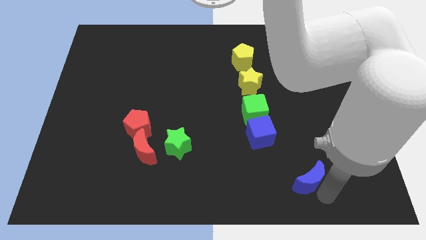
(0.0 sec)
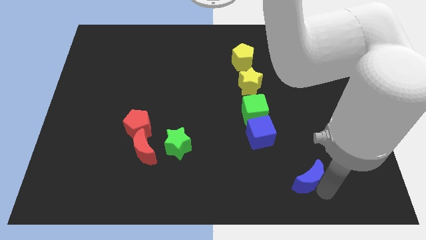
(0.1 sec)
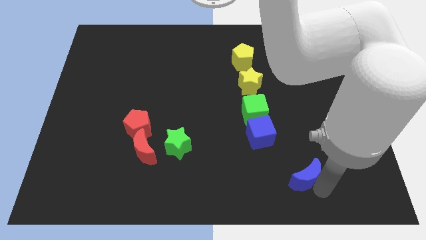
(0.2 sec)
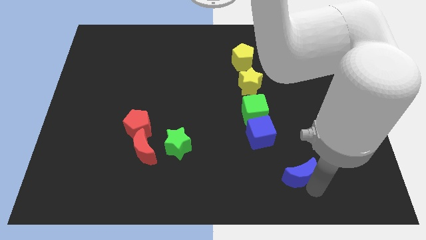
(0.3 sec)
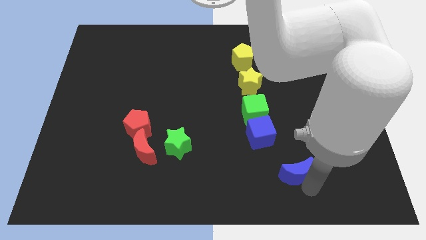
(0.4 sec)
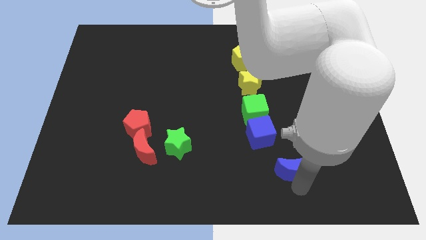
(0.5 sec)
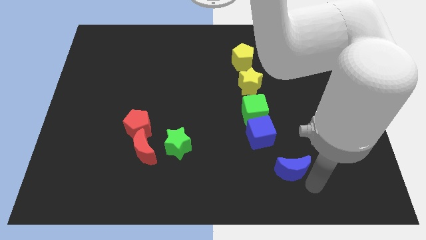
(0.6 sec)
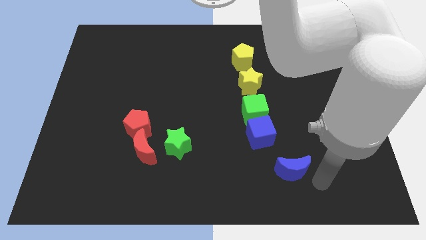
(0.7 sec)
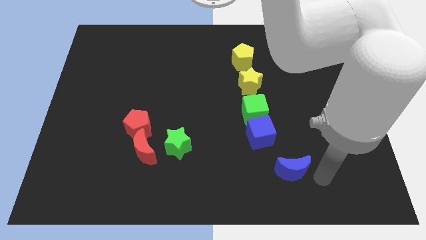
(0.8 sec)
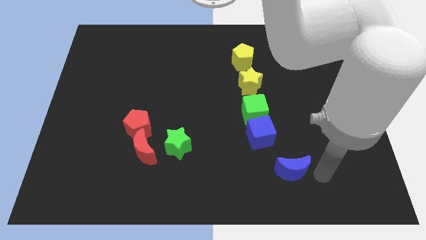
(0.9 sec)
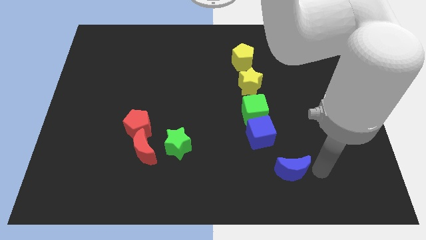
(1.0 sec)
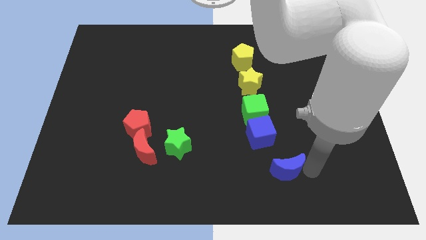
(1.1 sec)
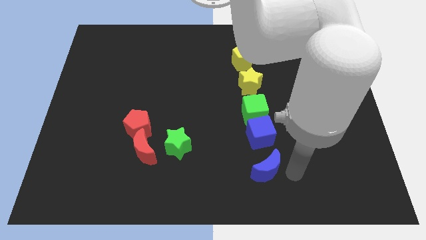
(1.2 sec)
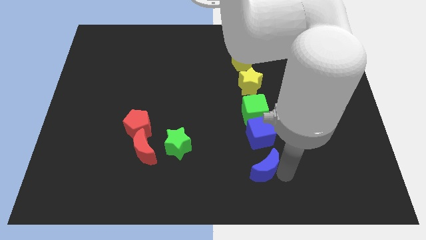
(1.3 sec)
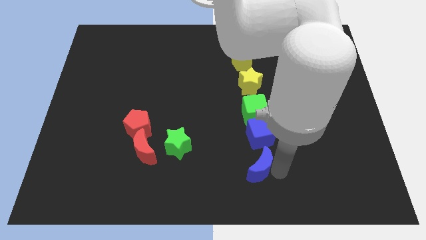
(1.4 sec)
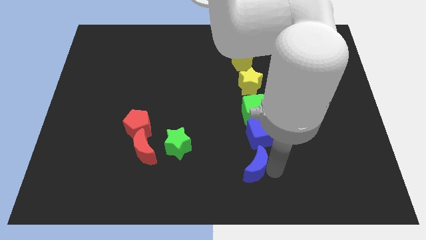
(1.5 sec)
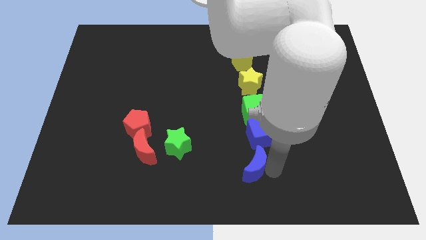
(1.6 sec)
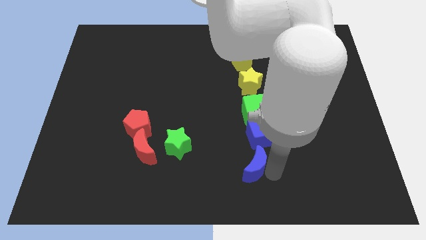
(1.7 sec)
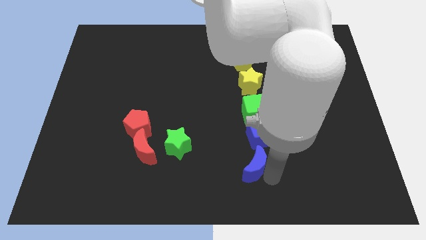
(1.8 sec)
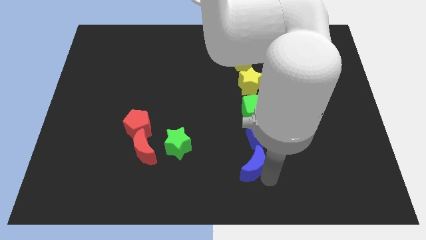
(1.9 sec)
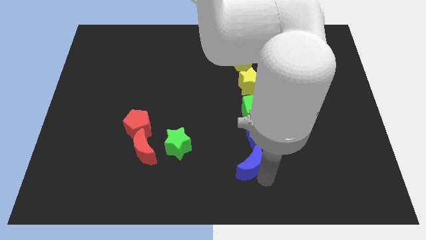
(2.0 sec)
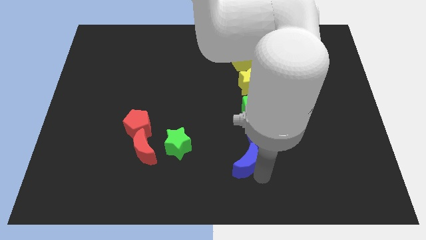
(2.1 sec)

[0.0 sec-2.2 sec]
place blue moon below blue cube

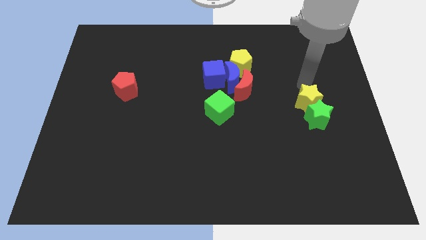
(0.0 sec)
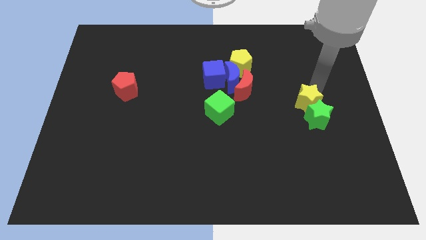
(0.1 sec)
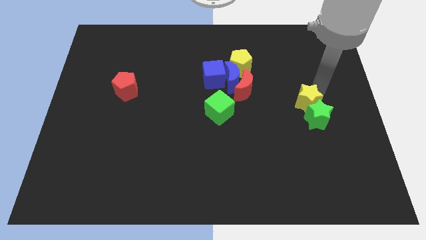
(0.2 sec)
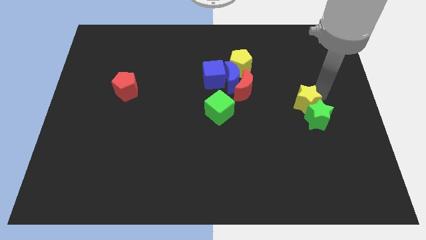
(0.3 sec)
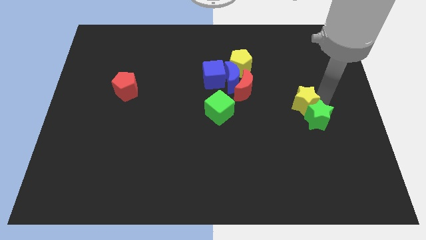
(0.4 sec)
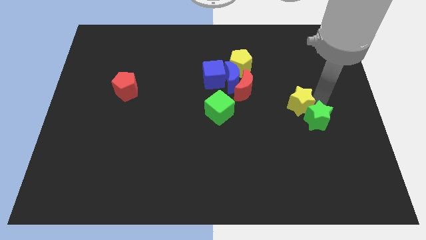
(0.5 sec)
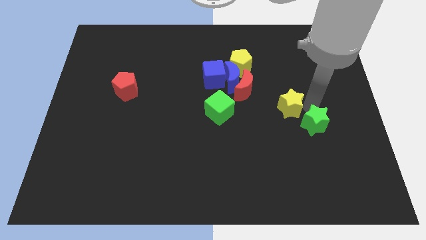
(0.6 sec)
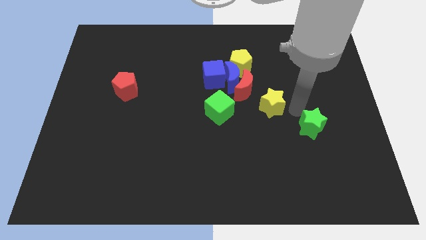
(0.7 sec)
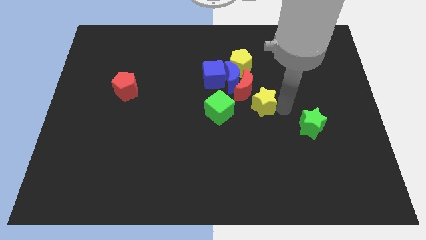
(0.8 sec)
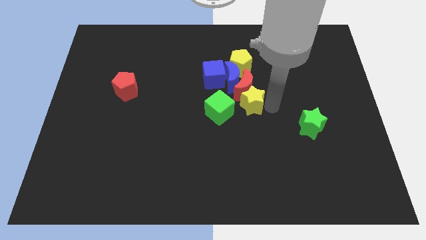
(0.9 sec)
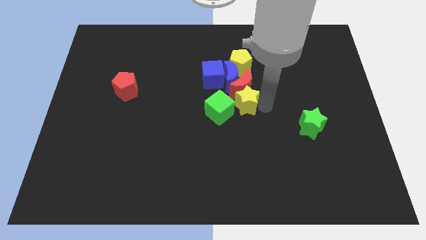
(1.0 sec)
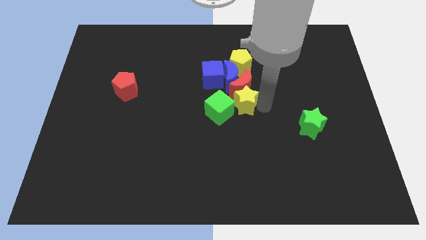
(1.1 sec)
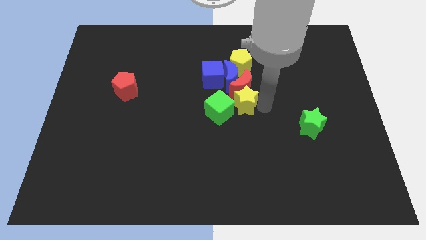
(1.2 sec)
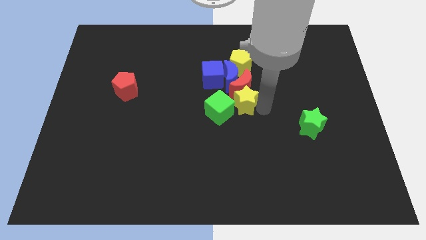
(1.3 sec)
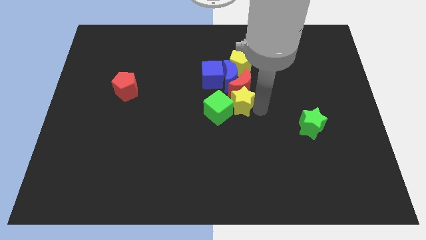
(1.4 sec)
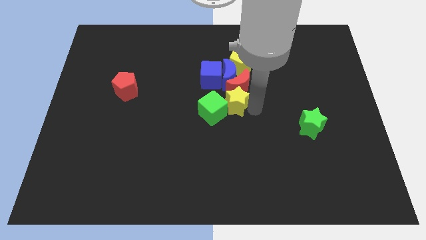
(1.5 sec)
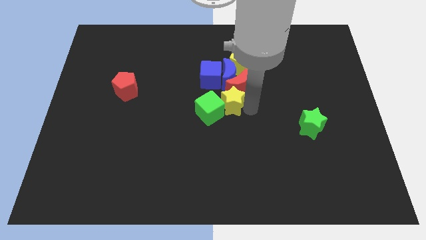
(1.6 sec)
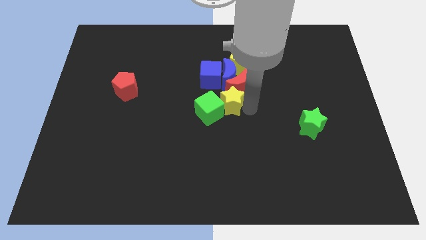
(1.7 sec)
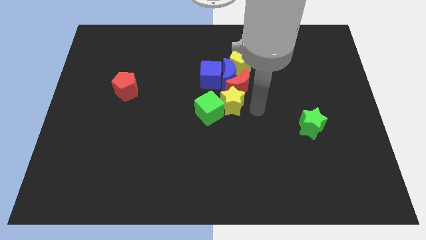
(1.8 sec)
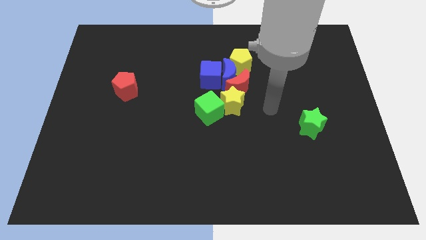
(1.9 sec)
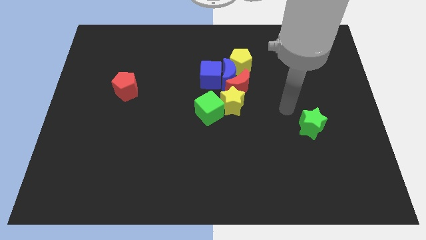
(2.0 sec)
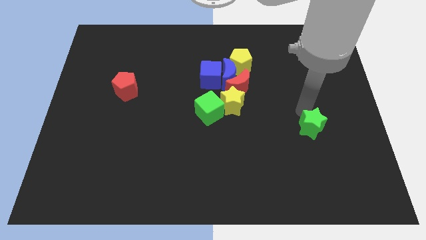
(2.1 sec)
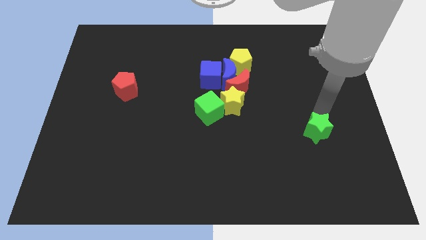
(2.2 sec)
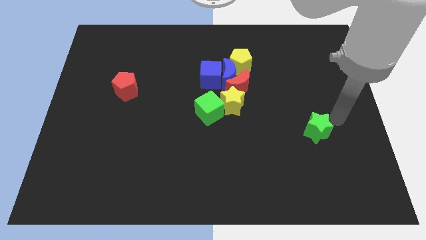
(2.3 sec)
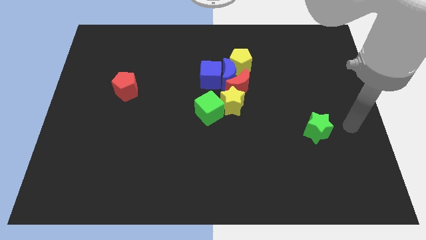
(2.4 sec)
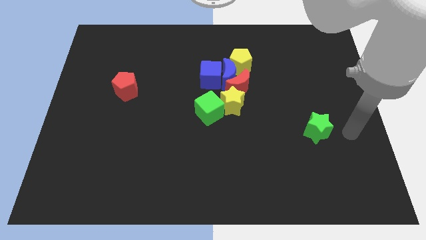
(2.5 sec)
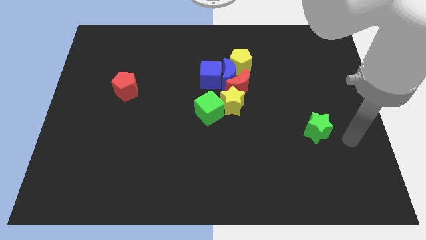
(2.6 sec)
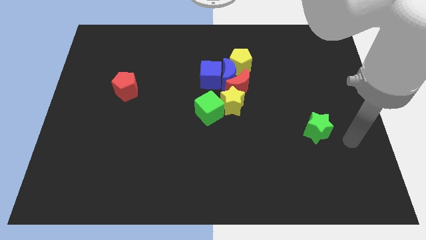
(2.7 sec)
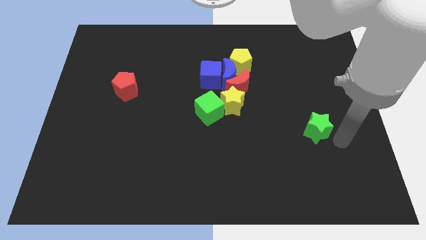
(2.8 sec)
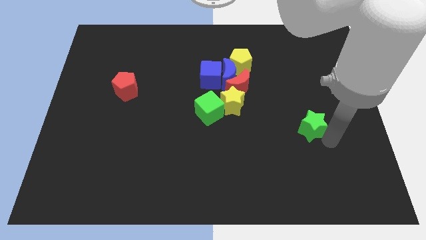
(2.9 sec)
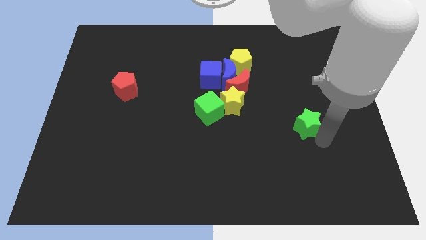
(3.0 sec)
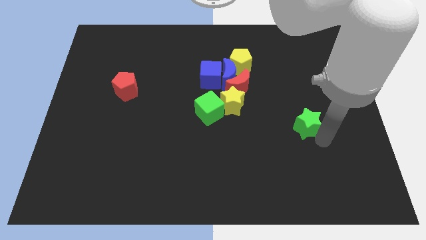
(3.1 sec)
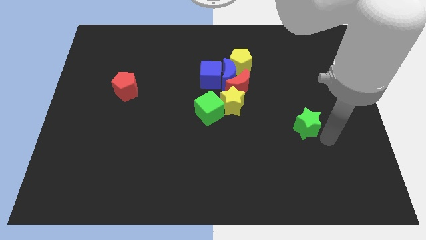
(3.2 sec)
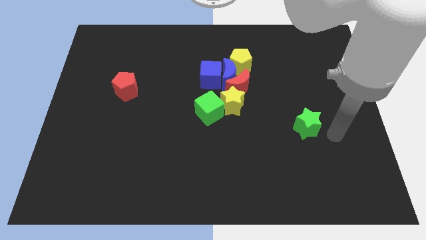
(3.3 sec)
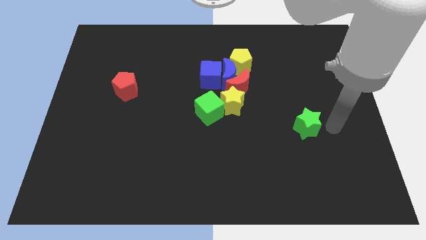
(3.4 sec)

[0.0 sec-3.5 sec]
move yellow star close to green block

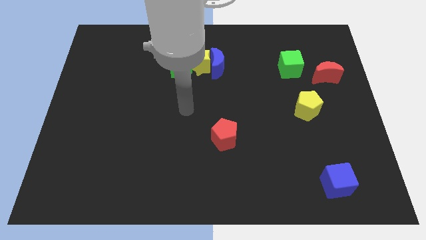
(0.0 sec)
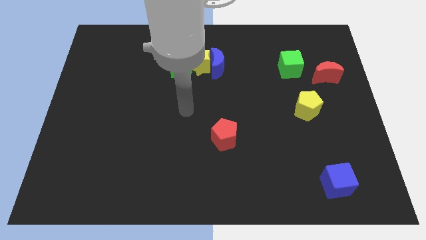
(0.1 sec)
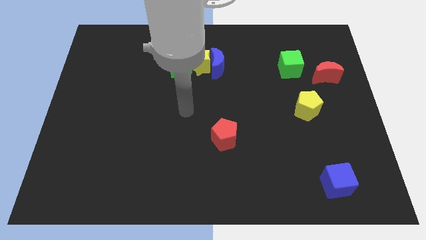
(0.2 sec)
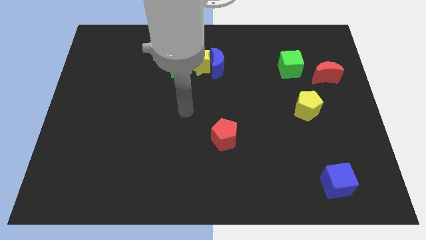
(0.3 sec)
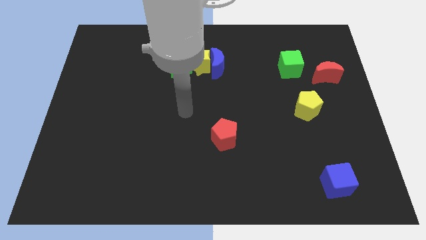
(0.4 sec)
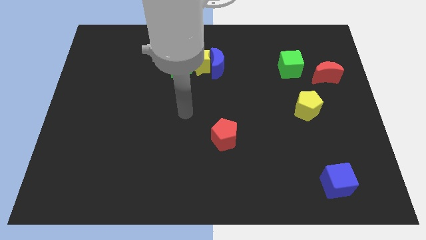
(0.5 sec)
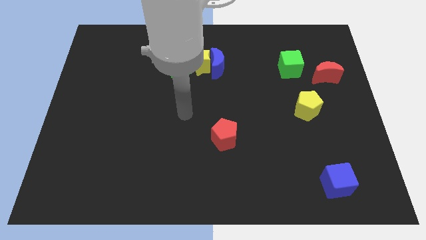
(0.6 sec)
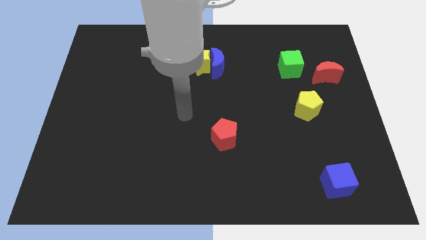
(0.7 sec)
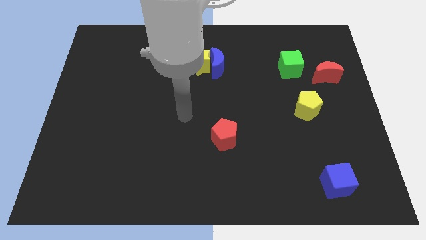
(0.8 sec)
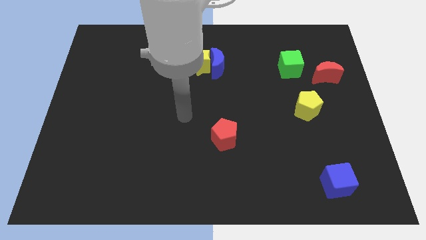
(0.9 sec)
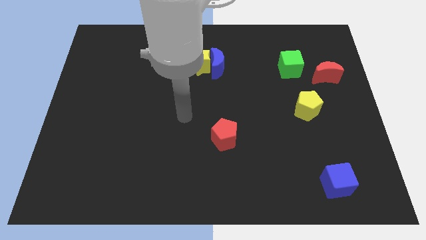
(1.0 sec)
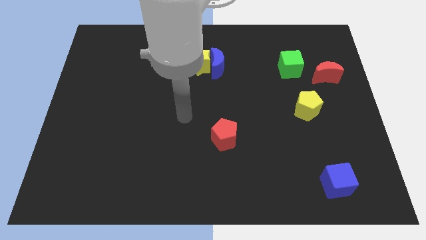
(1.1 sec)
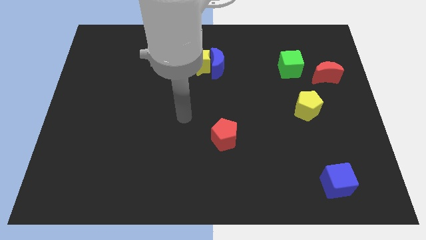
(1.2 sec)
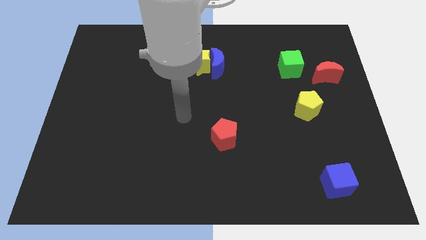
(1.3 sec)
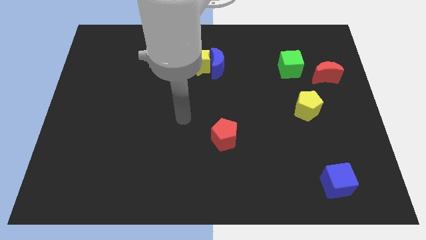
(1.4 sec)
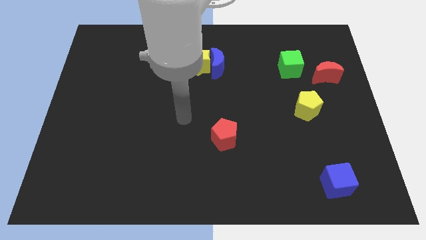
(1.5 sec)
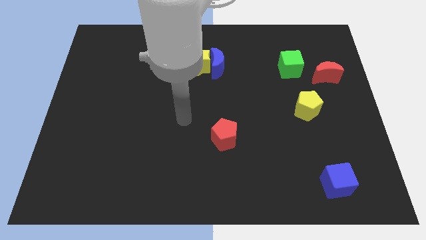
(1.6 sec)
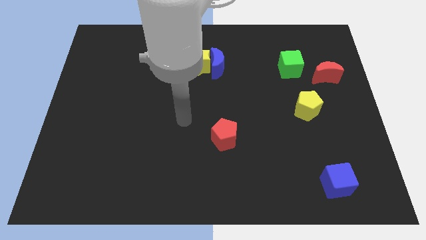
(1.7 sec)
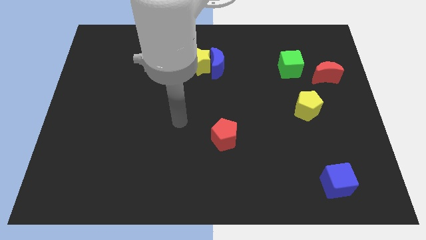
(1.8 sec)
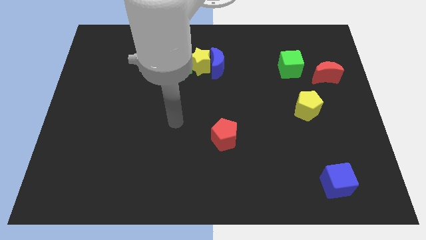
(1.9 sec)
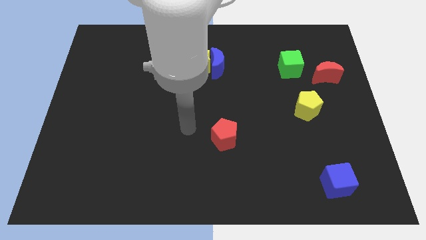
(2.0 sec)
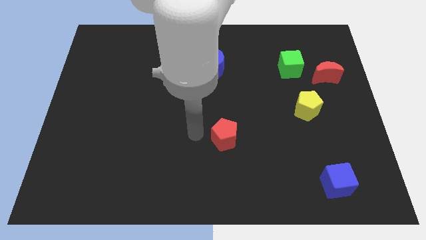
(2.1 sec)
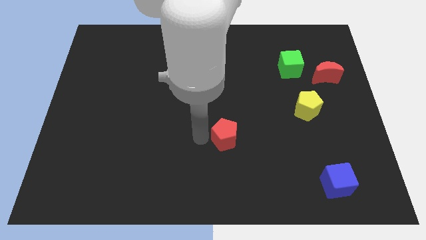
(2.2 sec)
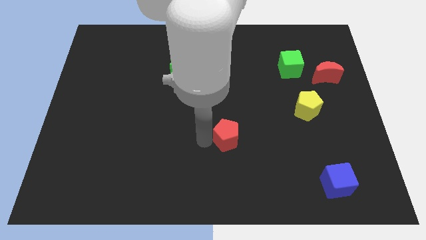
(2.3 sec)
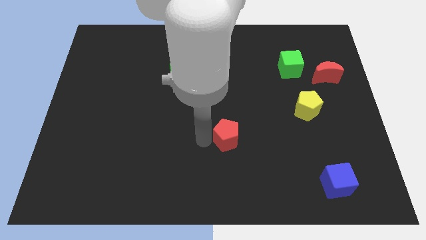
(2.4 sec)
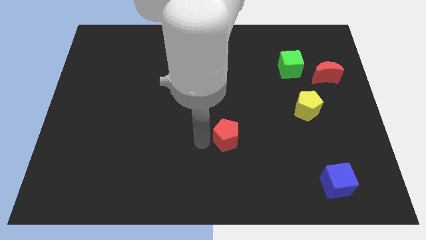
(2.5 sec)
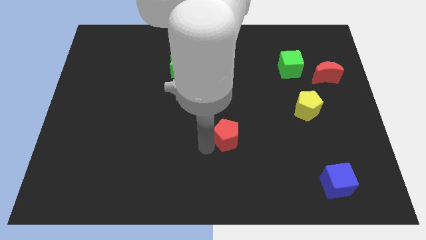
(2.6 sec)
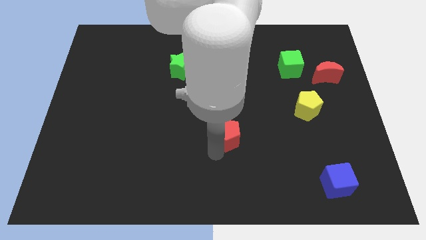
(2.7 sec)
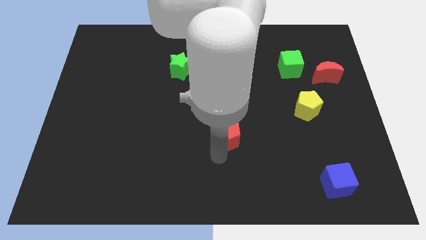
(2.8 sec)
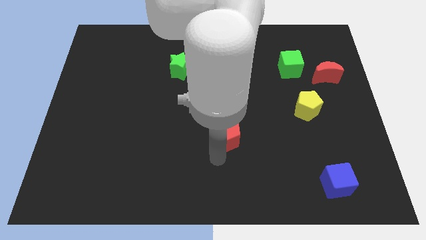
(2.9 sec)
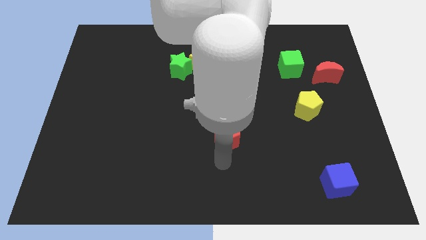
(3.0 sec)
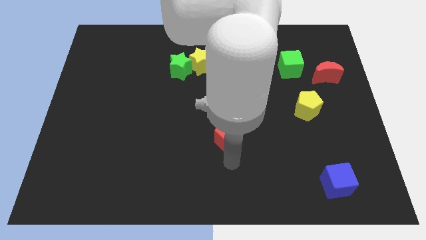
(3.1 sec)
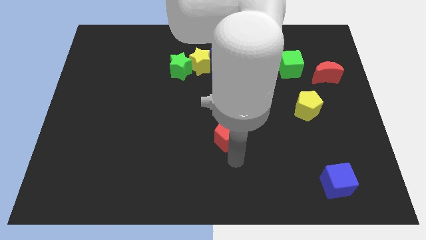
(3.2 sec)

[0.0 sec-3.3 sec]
move your arm down to the red pentagon
